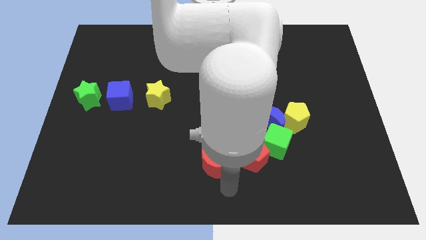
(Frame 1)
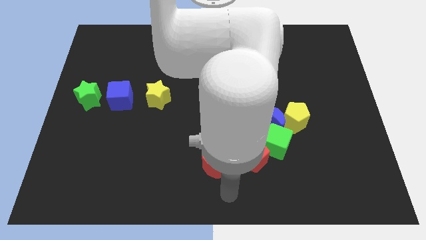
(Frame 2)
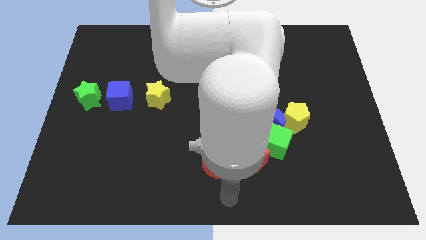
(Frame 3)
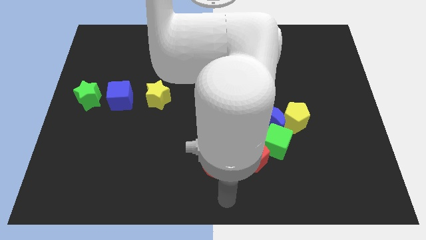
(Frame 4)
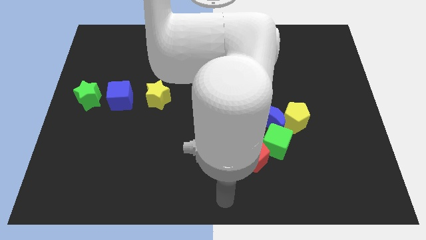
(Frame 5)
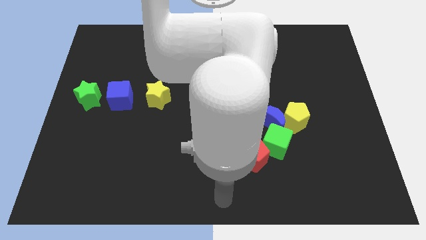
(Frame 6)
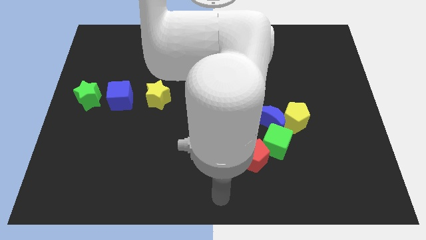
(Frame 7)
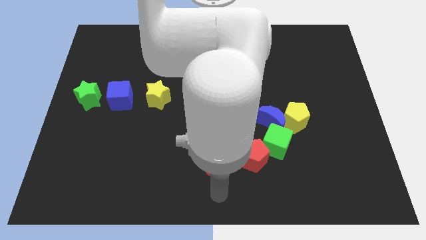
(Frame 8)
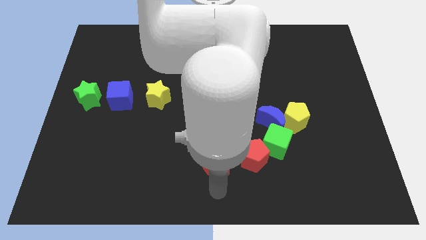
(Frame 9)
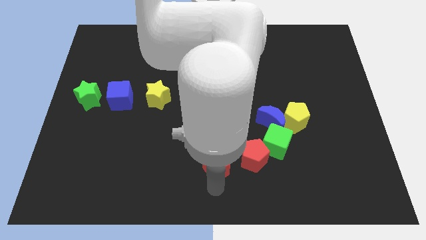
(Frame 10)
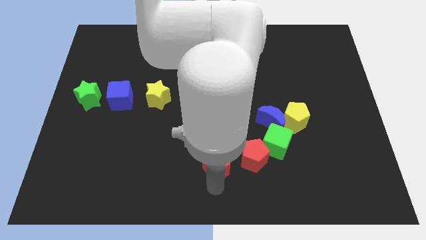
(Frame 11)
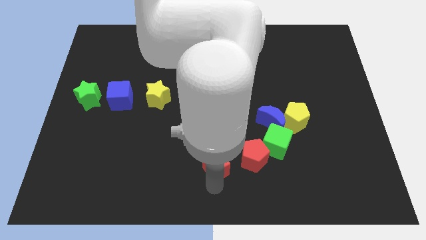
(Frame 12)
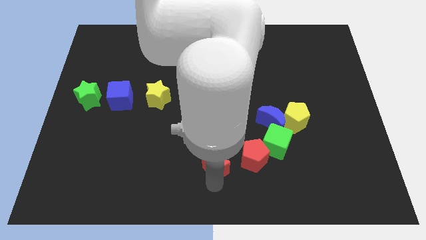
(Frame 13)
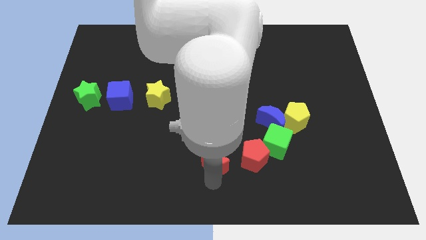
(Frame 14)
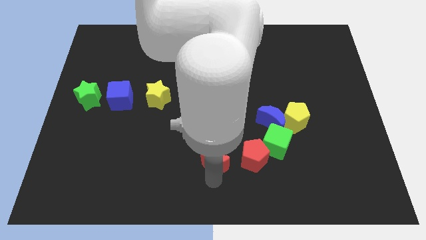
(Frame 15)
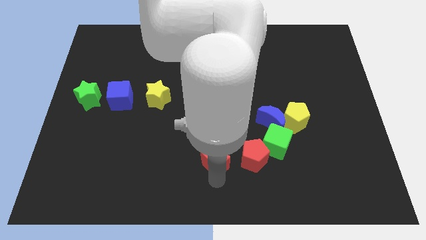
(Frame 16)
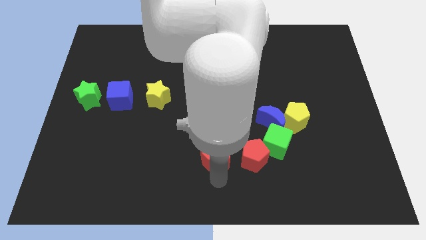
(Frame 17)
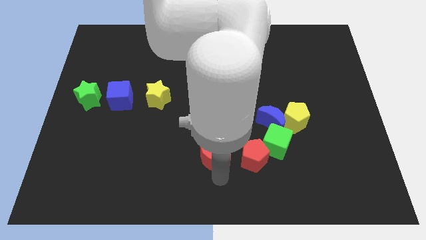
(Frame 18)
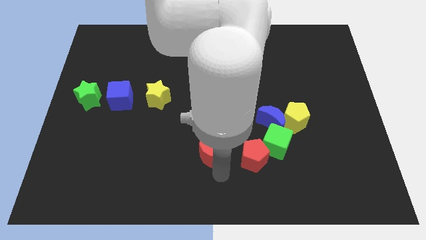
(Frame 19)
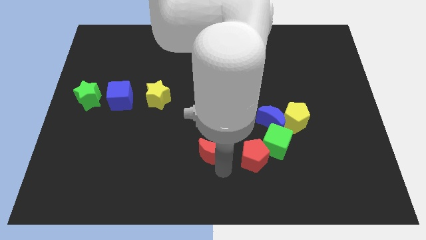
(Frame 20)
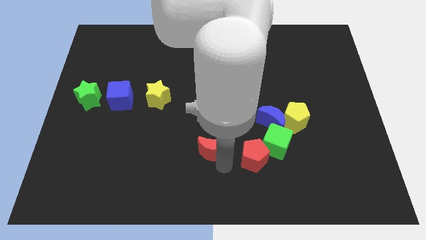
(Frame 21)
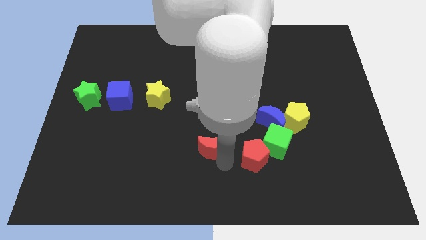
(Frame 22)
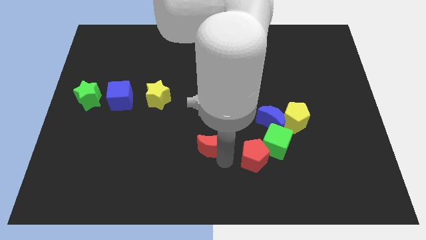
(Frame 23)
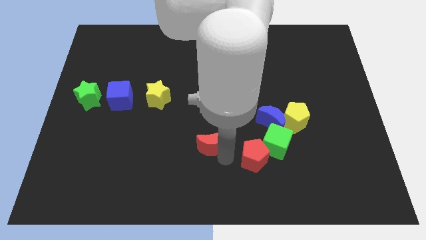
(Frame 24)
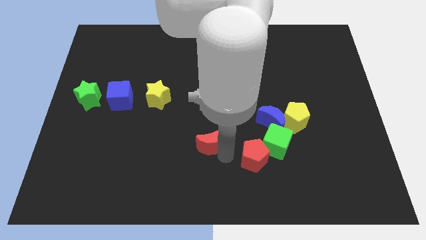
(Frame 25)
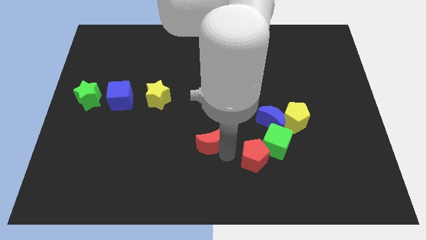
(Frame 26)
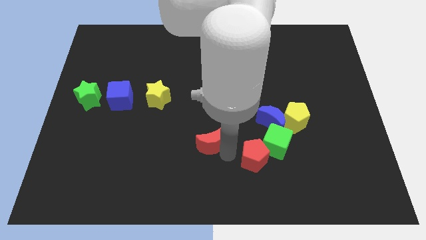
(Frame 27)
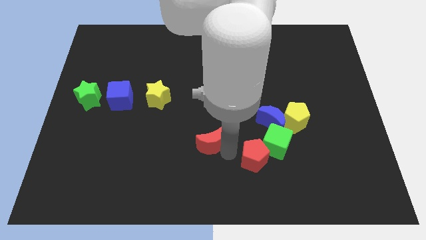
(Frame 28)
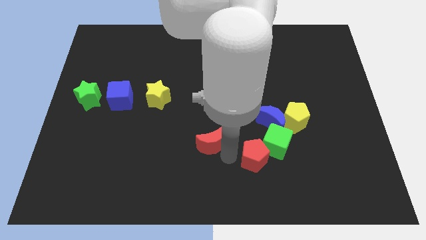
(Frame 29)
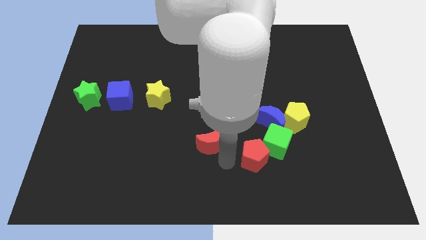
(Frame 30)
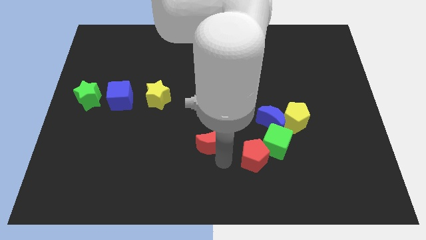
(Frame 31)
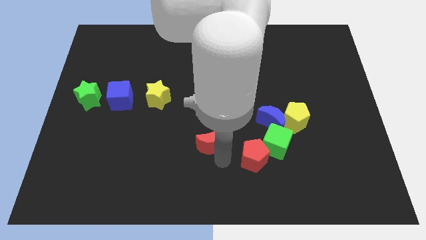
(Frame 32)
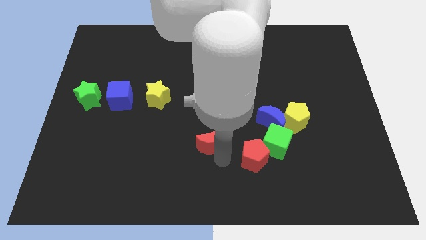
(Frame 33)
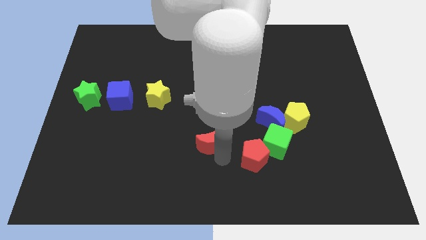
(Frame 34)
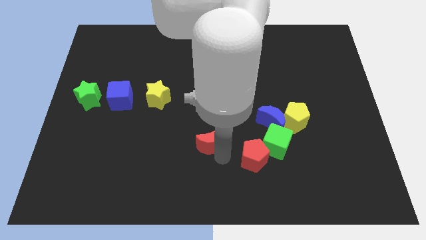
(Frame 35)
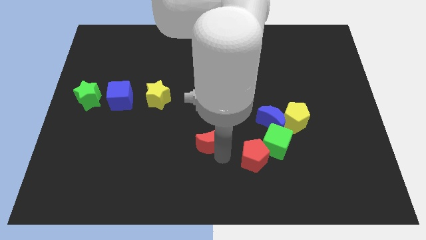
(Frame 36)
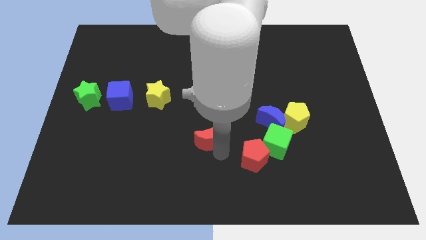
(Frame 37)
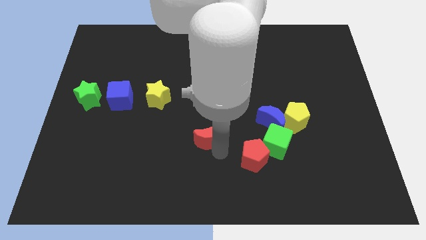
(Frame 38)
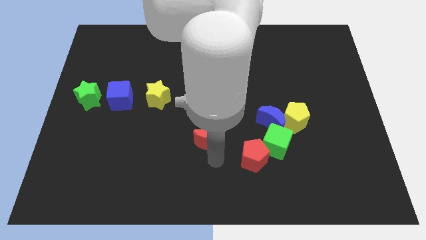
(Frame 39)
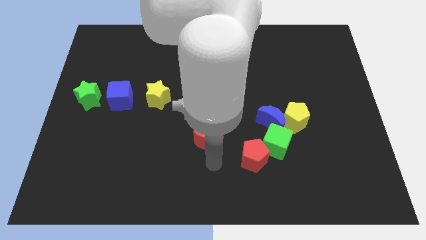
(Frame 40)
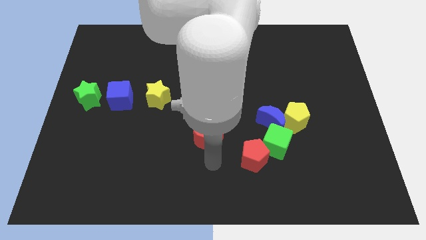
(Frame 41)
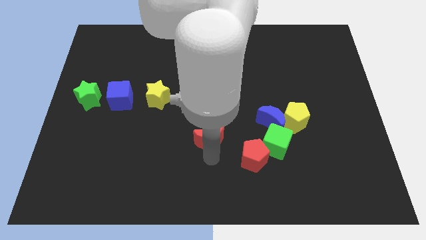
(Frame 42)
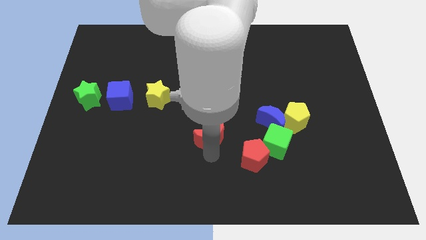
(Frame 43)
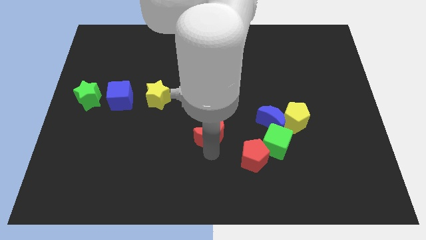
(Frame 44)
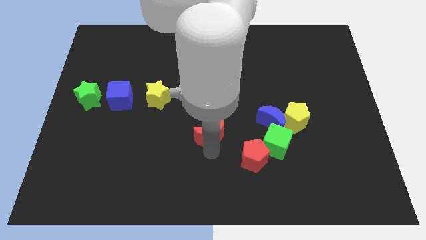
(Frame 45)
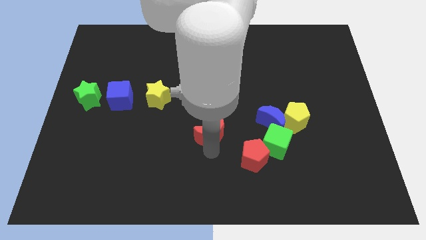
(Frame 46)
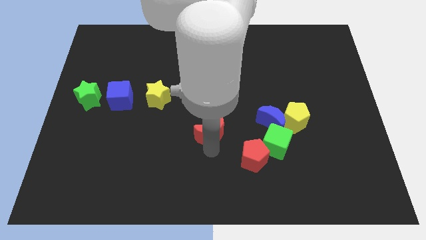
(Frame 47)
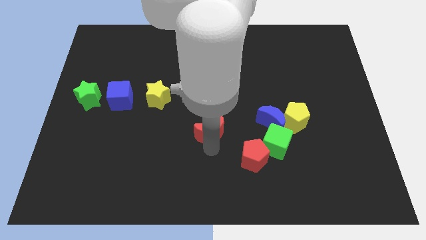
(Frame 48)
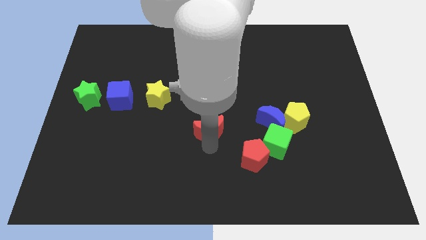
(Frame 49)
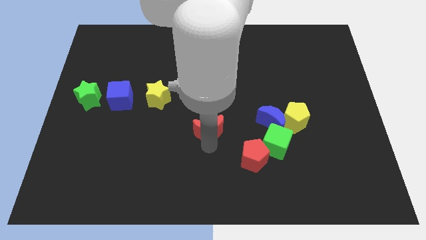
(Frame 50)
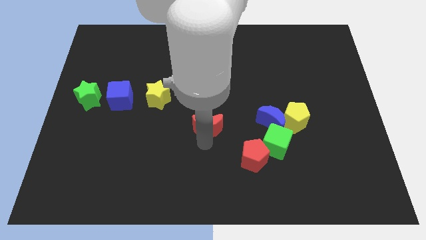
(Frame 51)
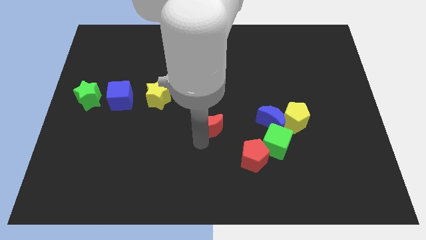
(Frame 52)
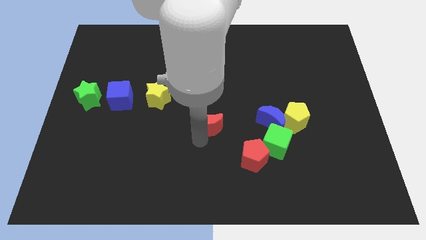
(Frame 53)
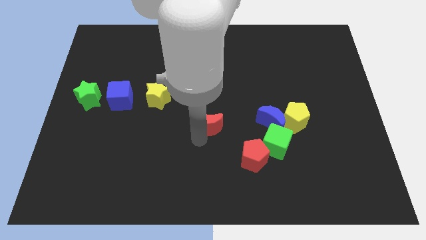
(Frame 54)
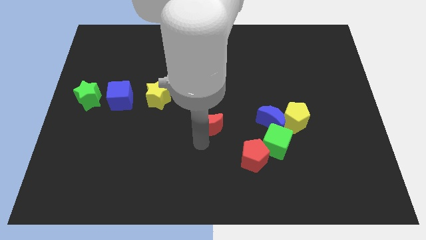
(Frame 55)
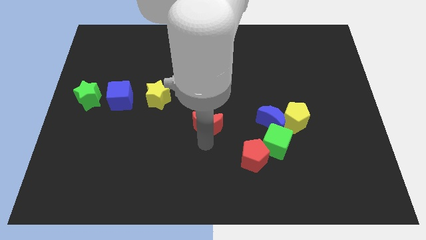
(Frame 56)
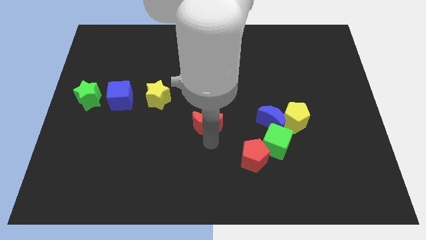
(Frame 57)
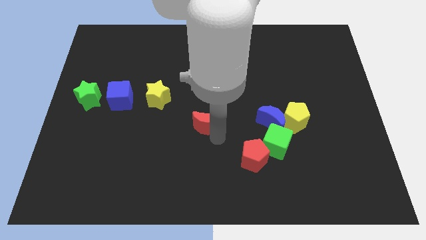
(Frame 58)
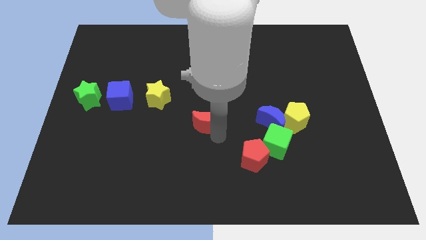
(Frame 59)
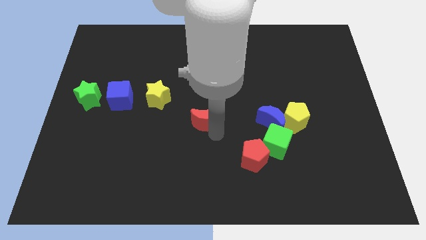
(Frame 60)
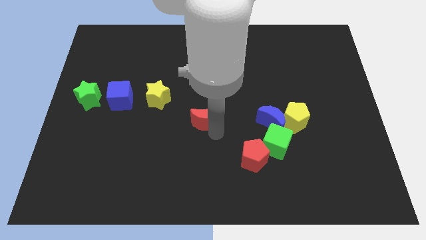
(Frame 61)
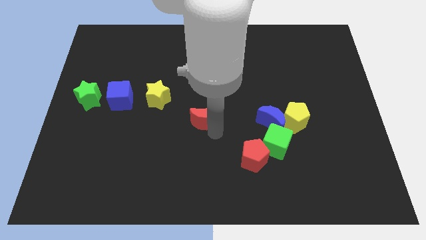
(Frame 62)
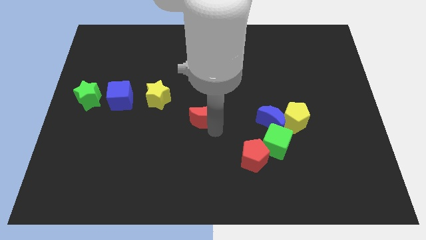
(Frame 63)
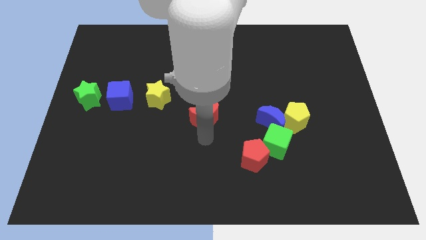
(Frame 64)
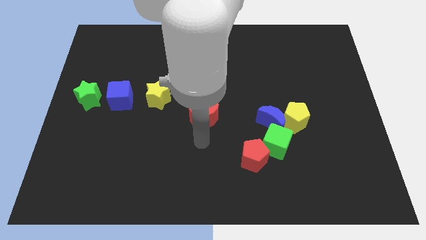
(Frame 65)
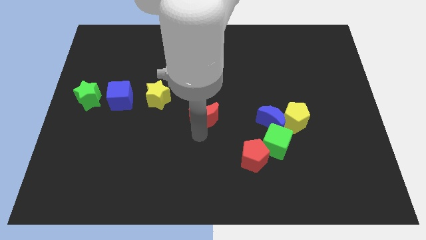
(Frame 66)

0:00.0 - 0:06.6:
place the red crescent horizontally at the left side of the blue moon

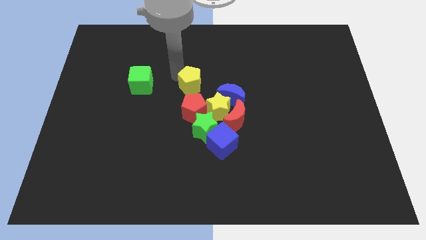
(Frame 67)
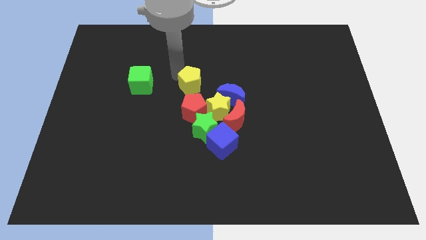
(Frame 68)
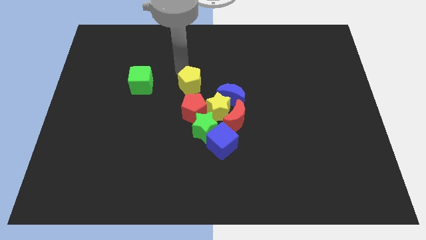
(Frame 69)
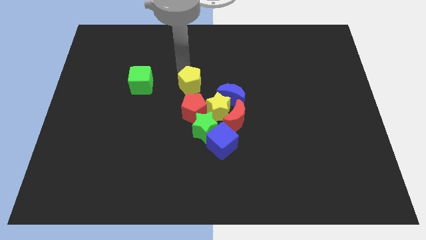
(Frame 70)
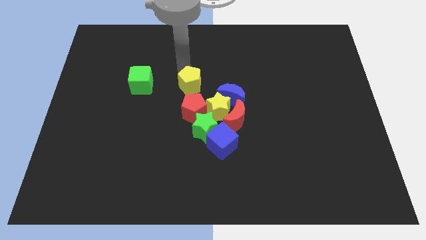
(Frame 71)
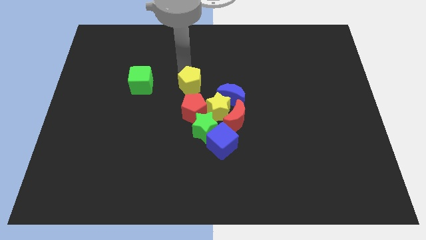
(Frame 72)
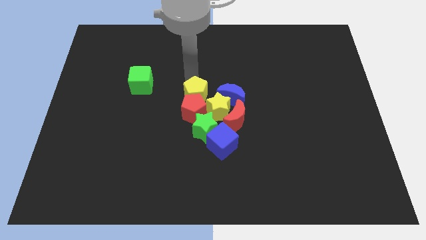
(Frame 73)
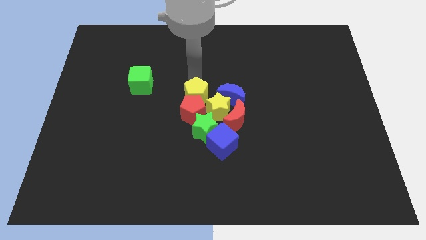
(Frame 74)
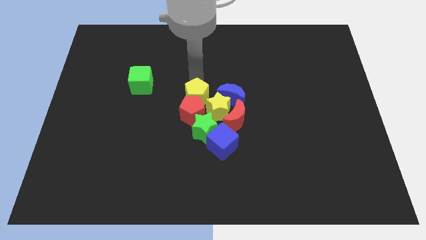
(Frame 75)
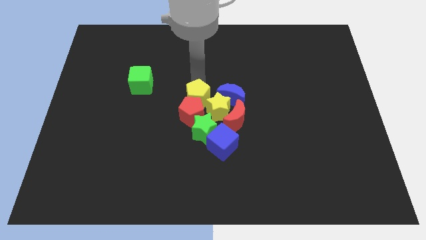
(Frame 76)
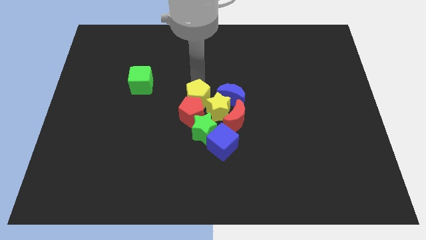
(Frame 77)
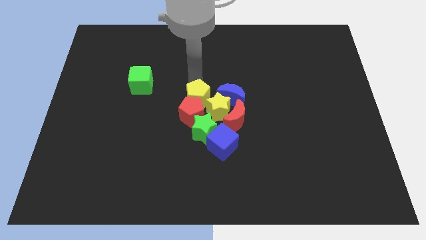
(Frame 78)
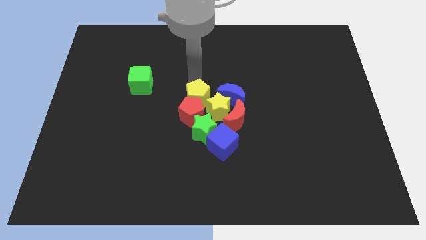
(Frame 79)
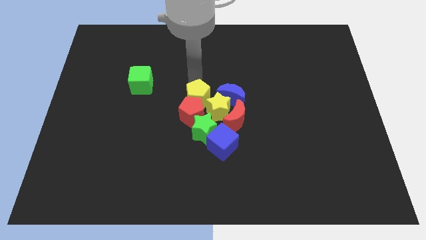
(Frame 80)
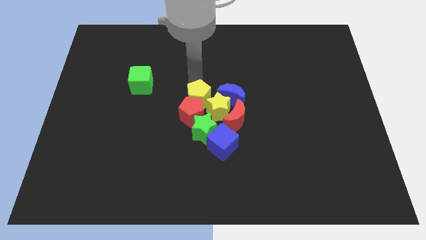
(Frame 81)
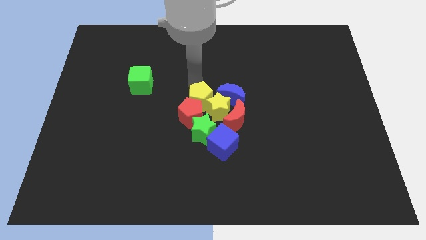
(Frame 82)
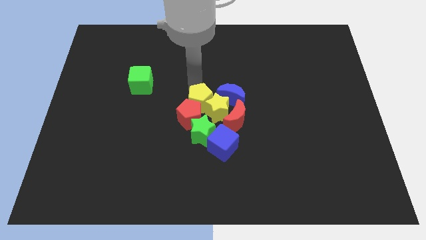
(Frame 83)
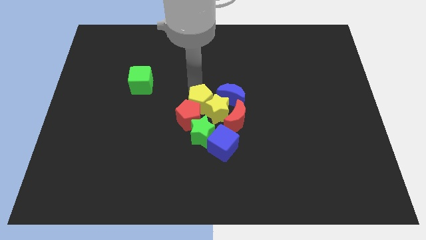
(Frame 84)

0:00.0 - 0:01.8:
push the yellow pentagon into a group of blocks

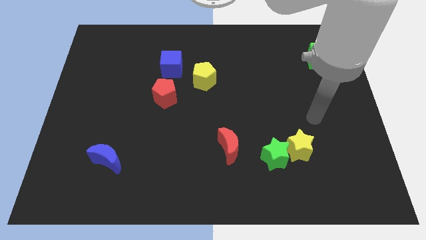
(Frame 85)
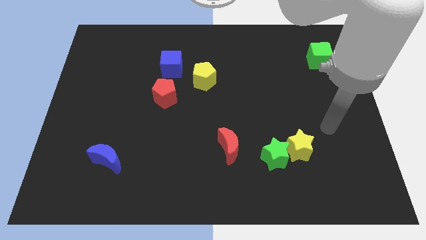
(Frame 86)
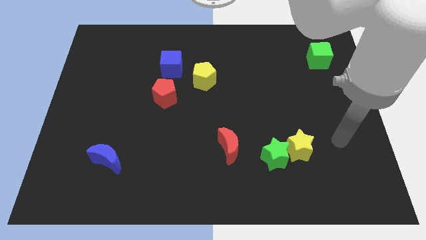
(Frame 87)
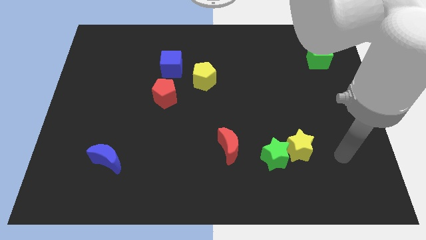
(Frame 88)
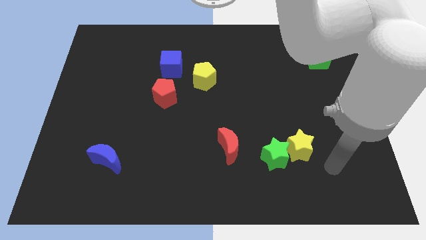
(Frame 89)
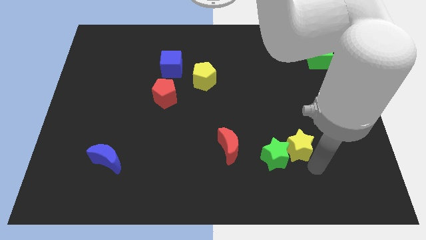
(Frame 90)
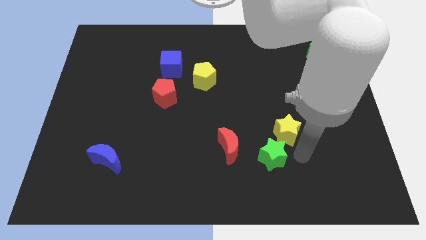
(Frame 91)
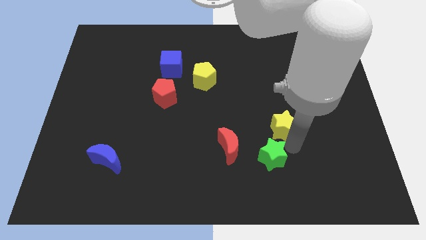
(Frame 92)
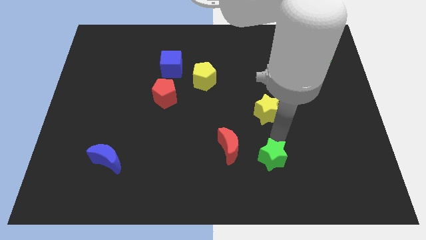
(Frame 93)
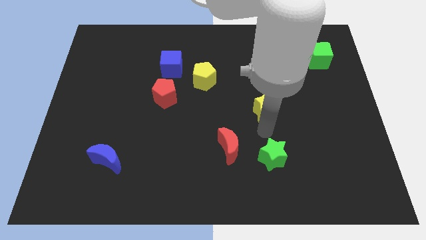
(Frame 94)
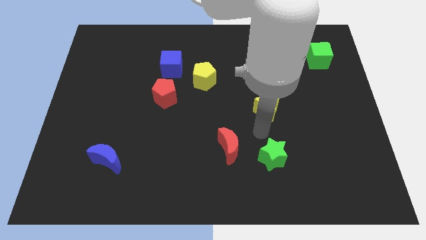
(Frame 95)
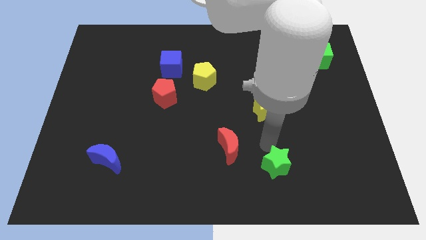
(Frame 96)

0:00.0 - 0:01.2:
place yellow star to the top of green star
